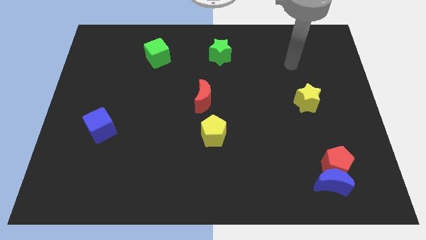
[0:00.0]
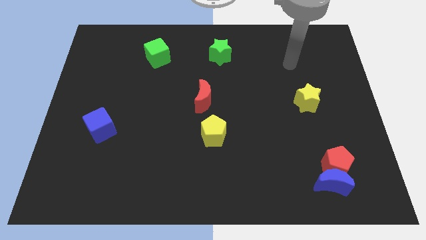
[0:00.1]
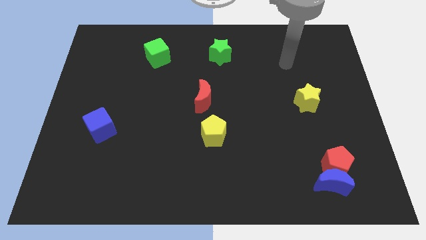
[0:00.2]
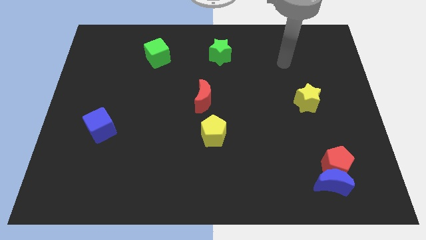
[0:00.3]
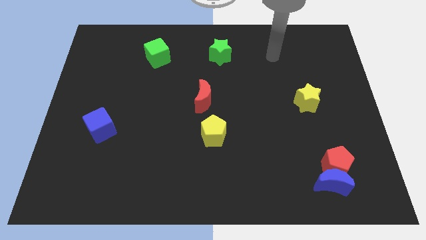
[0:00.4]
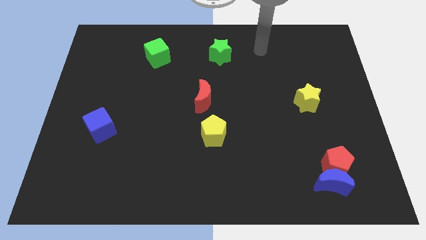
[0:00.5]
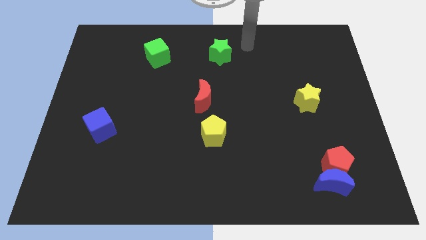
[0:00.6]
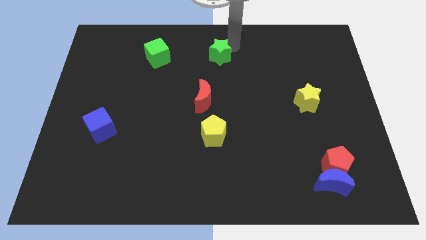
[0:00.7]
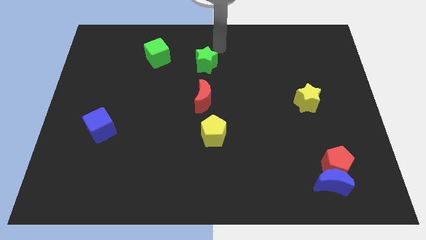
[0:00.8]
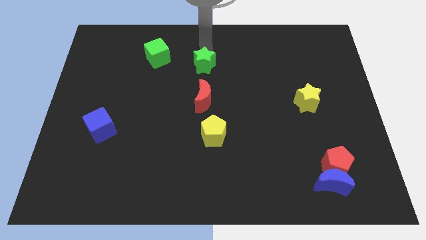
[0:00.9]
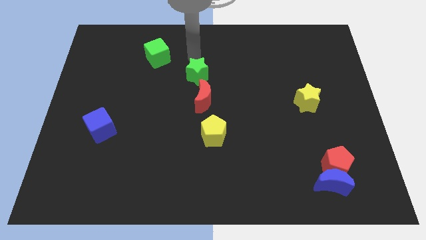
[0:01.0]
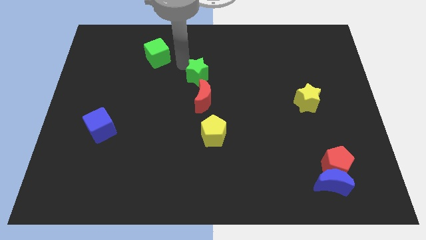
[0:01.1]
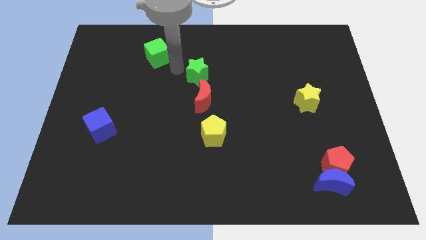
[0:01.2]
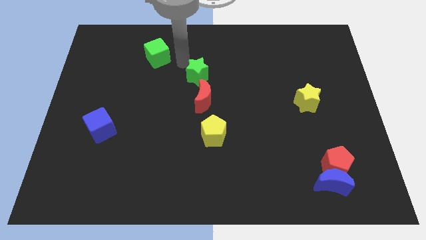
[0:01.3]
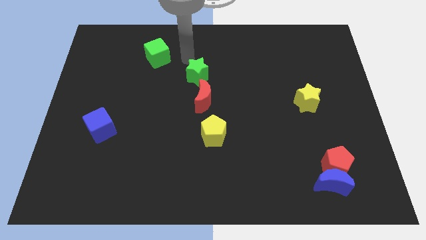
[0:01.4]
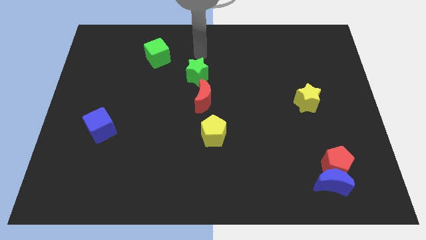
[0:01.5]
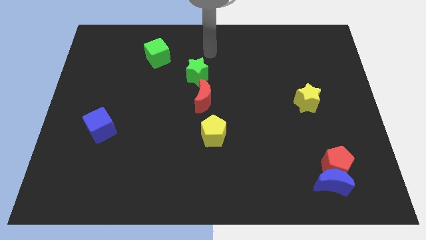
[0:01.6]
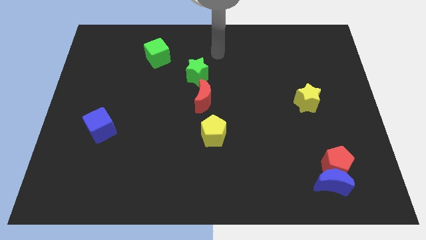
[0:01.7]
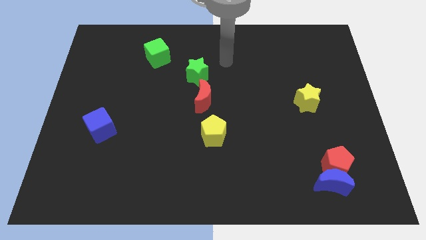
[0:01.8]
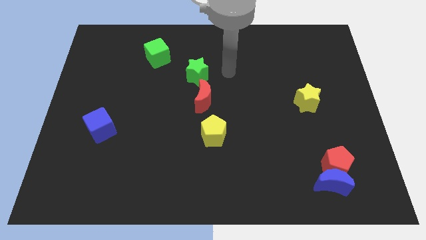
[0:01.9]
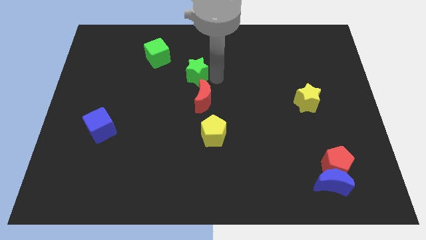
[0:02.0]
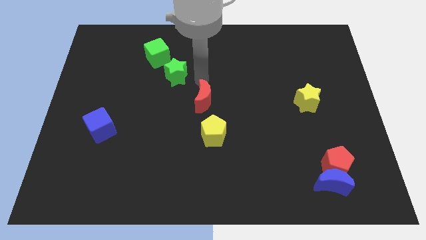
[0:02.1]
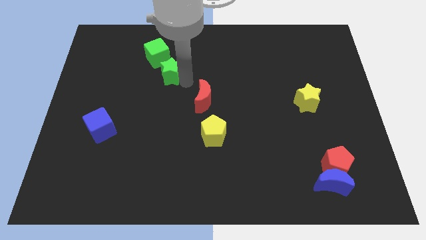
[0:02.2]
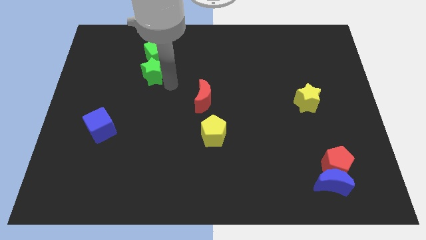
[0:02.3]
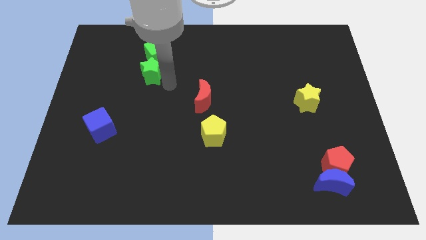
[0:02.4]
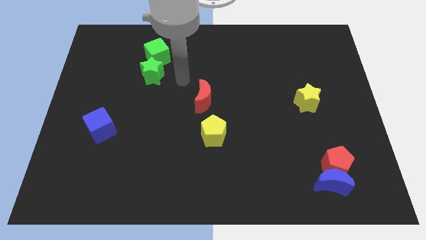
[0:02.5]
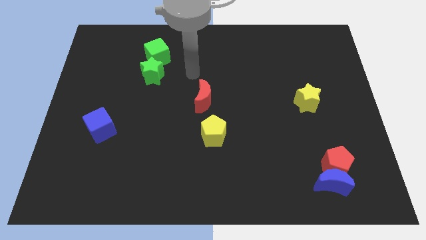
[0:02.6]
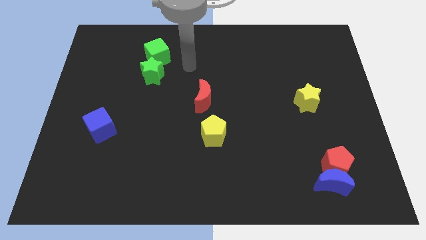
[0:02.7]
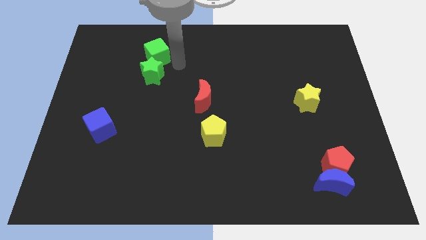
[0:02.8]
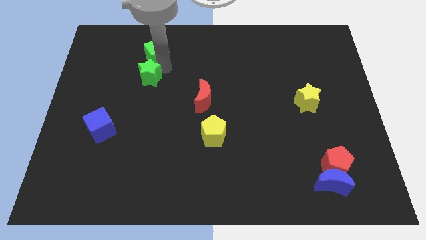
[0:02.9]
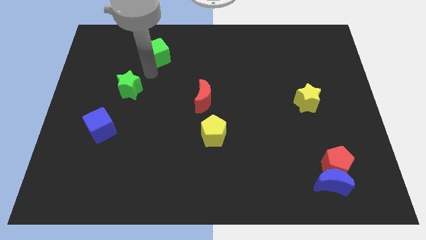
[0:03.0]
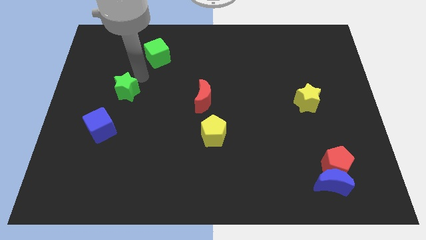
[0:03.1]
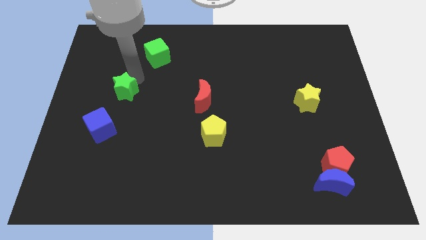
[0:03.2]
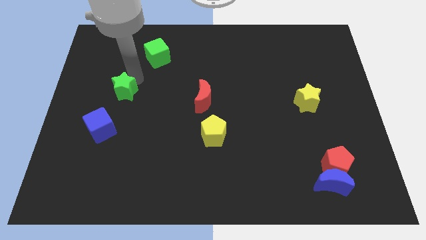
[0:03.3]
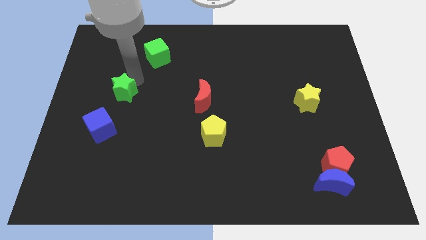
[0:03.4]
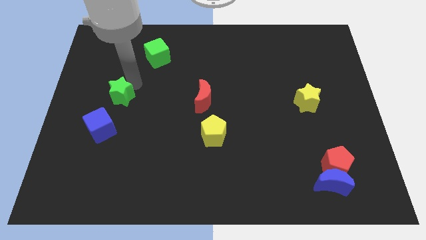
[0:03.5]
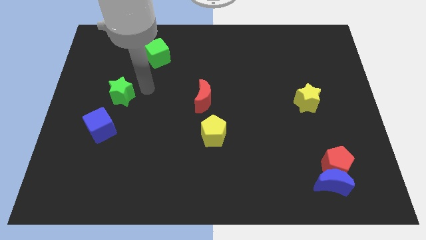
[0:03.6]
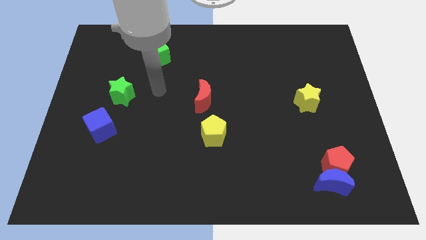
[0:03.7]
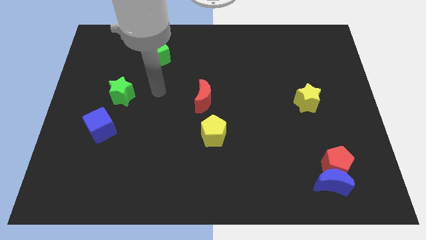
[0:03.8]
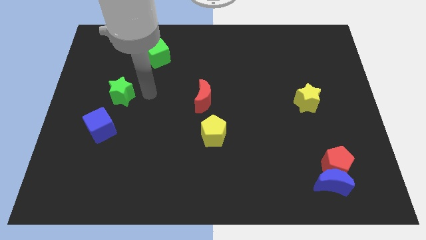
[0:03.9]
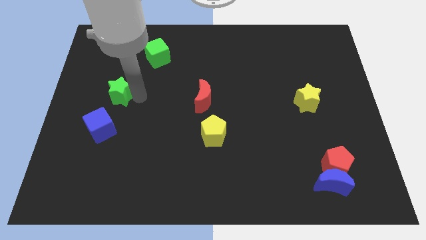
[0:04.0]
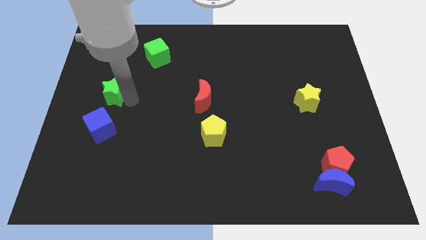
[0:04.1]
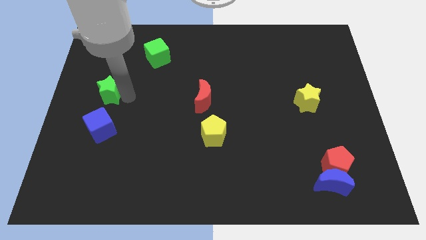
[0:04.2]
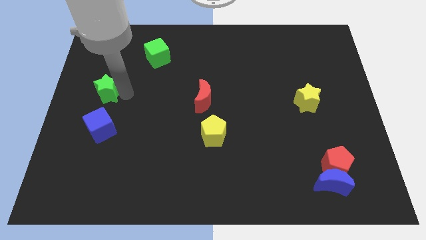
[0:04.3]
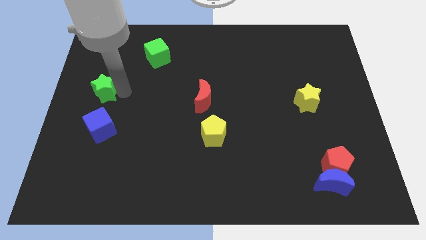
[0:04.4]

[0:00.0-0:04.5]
place green star above blue cube

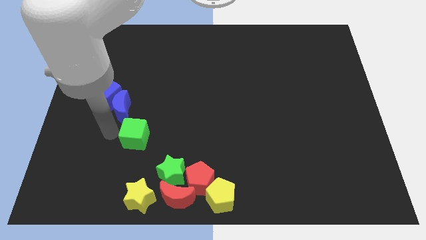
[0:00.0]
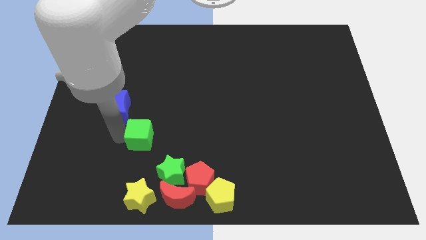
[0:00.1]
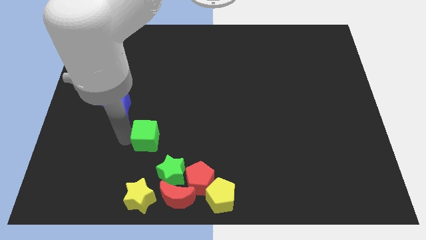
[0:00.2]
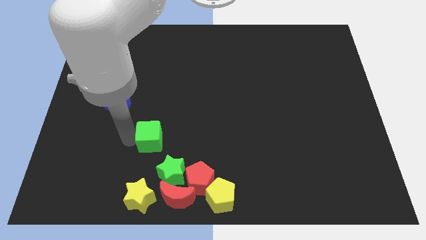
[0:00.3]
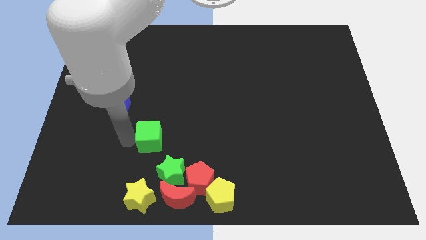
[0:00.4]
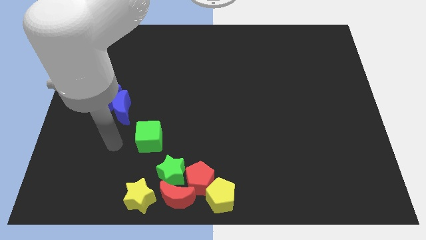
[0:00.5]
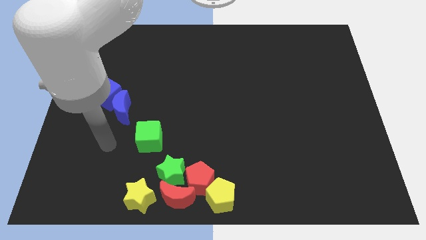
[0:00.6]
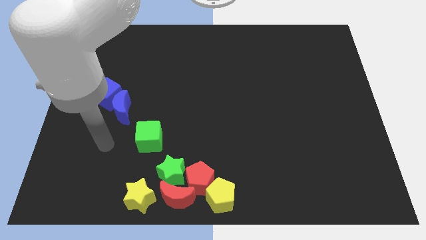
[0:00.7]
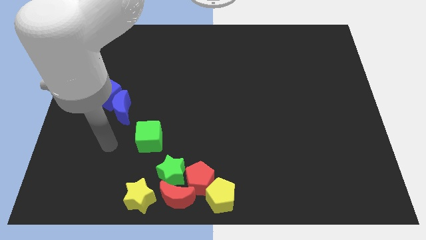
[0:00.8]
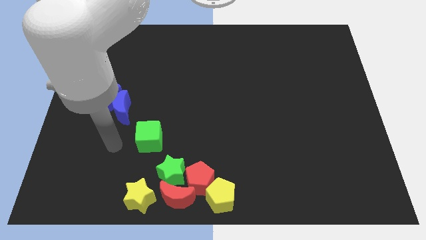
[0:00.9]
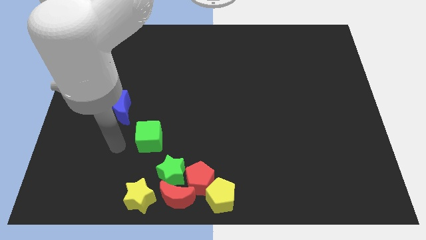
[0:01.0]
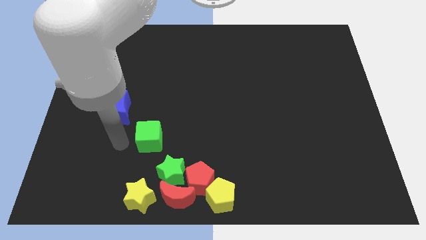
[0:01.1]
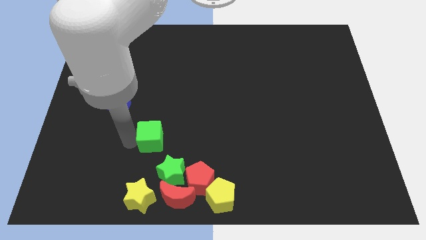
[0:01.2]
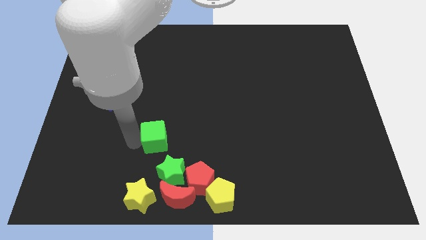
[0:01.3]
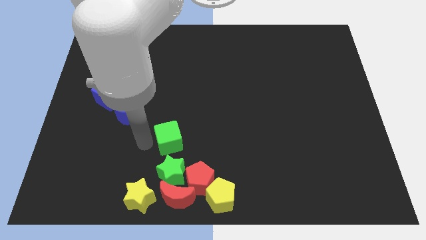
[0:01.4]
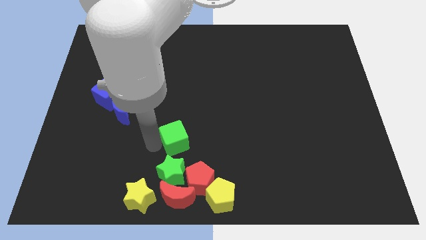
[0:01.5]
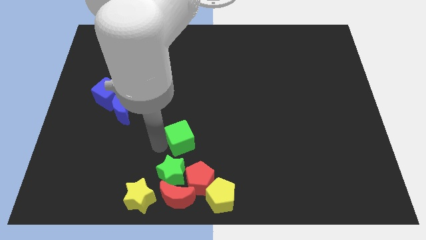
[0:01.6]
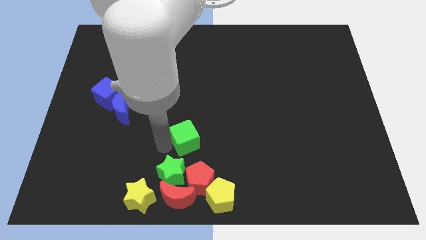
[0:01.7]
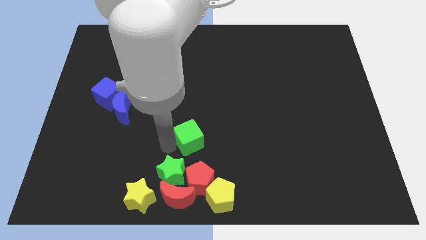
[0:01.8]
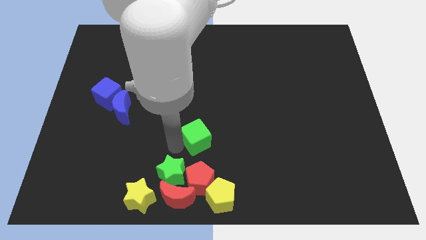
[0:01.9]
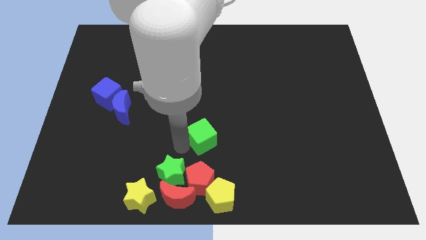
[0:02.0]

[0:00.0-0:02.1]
separate the green cube from the blue blocks

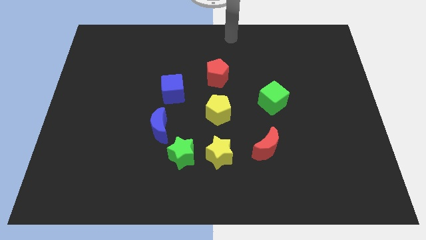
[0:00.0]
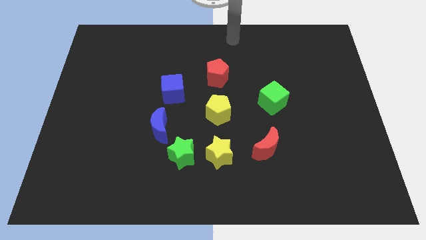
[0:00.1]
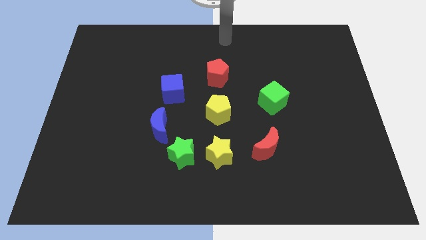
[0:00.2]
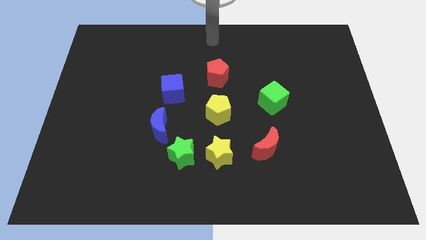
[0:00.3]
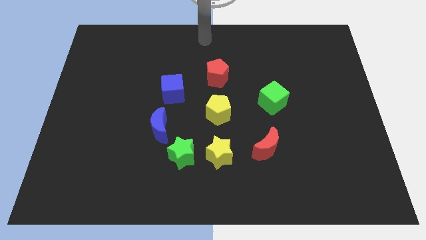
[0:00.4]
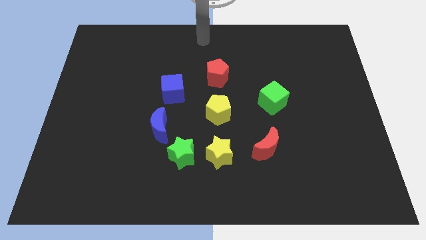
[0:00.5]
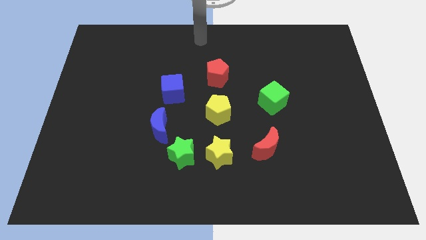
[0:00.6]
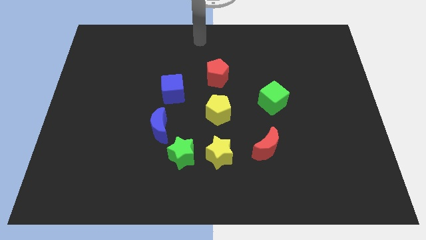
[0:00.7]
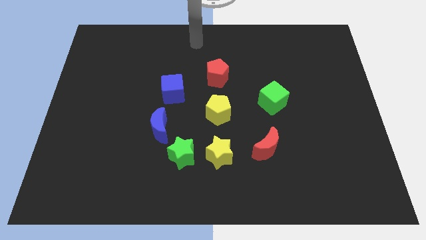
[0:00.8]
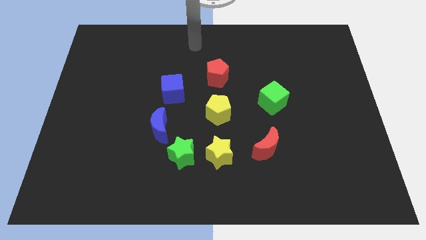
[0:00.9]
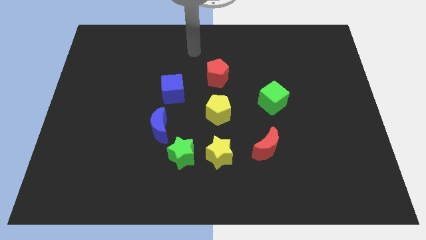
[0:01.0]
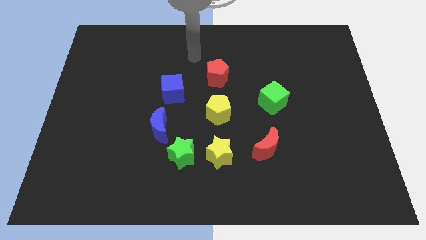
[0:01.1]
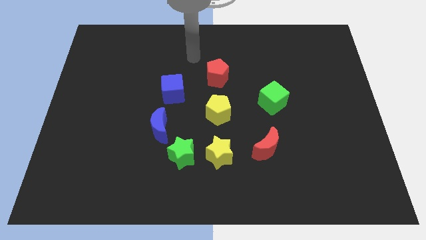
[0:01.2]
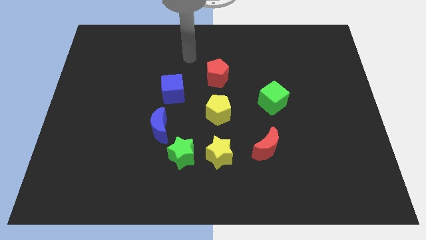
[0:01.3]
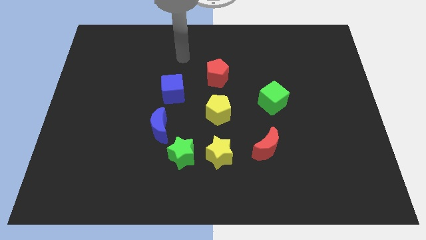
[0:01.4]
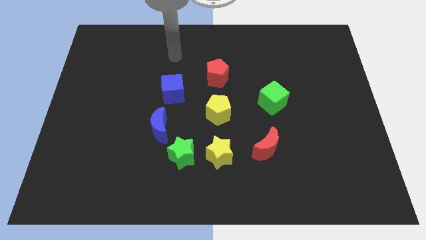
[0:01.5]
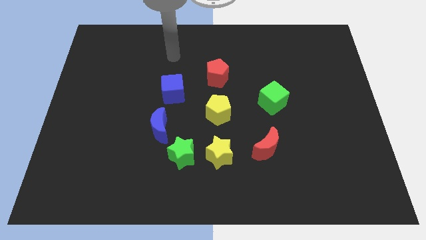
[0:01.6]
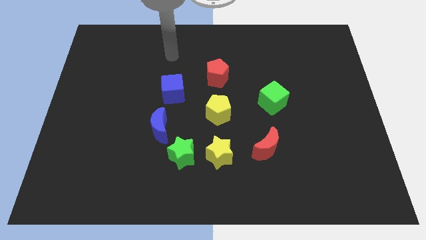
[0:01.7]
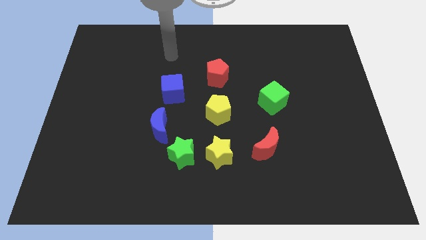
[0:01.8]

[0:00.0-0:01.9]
point your arm at the top side of the blue cube

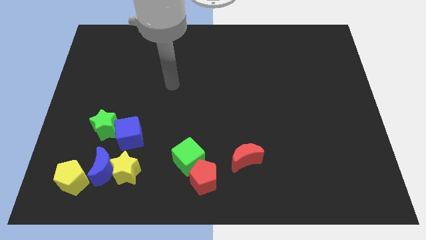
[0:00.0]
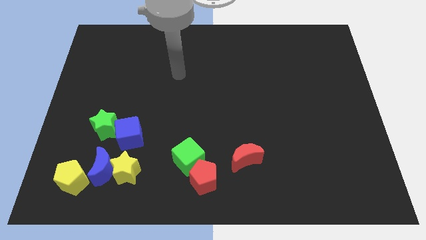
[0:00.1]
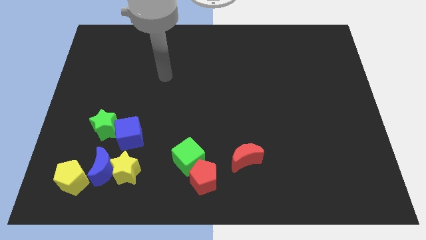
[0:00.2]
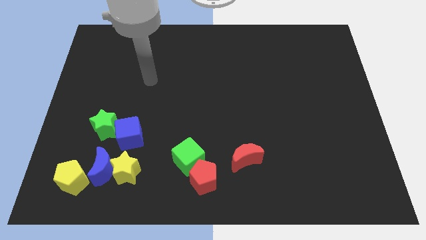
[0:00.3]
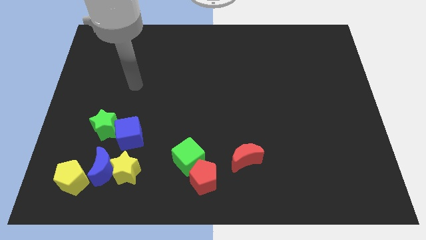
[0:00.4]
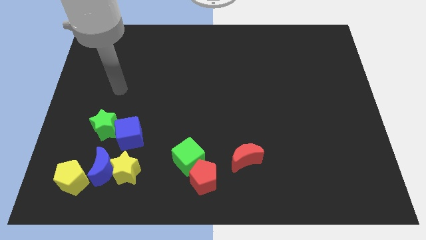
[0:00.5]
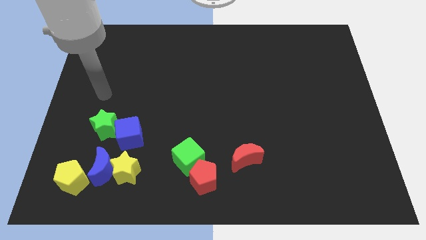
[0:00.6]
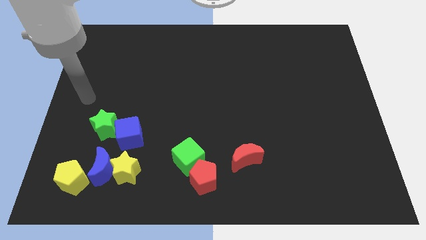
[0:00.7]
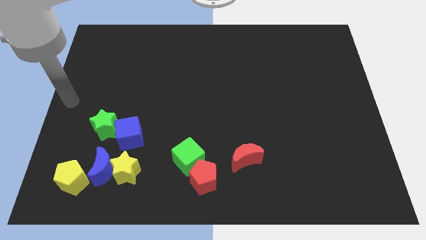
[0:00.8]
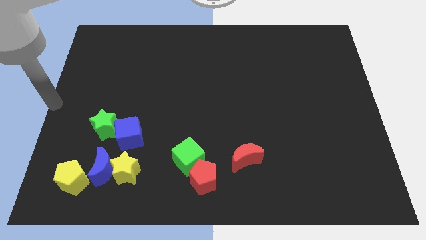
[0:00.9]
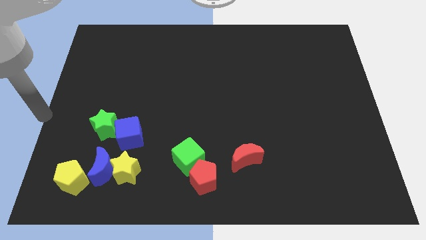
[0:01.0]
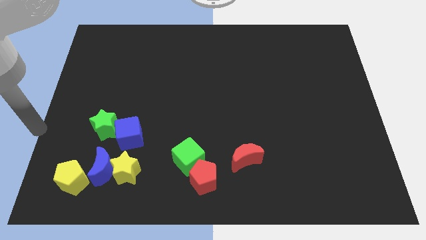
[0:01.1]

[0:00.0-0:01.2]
drag your arm to the center left of the table
